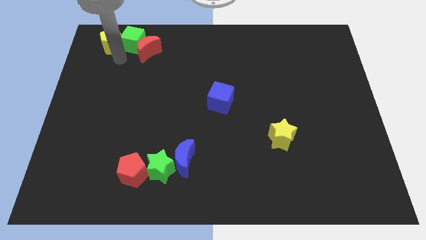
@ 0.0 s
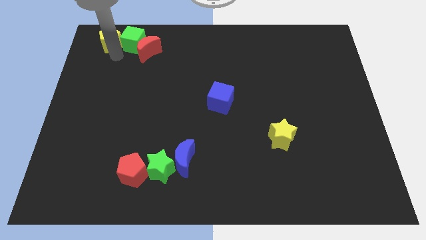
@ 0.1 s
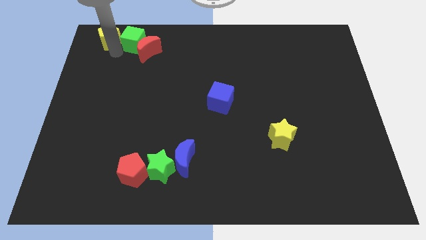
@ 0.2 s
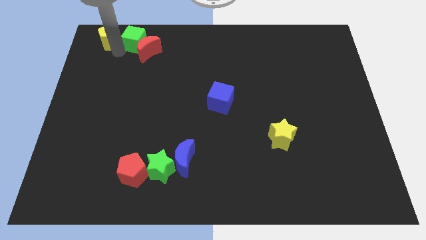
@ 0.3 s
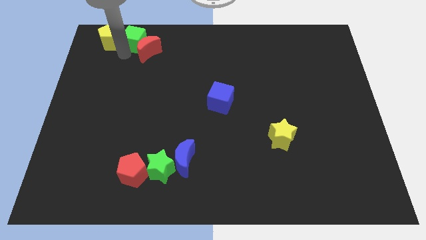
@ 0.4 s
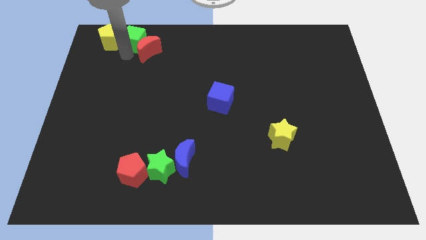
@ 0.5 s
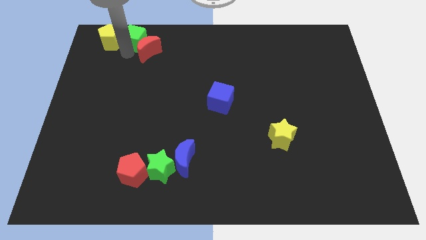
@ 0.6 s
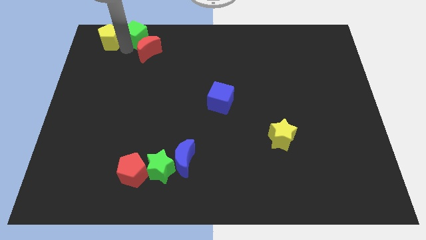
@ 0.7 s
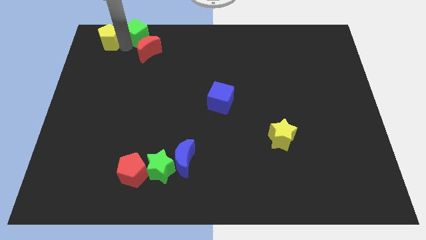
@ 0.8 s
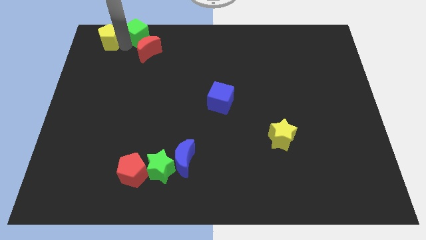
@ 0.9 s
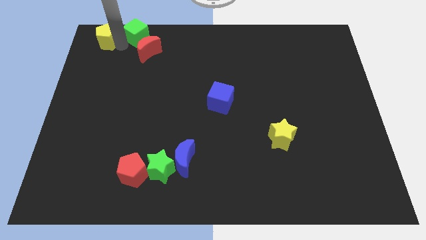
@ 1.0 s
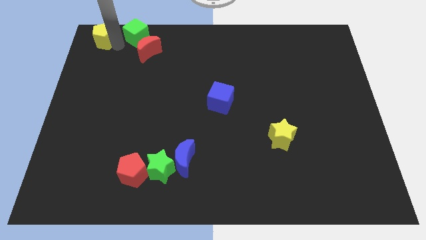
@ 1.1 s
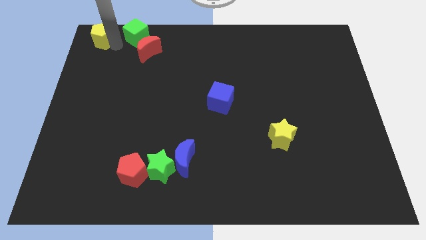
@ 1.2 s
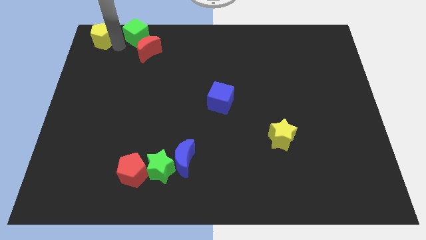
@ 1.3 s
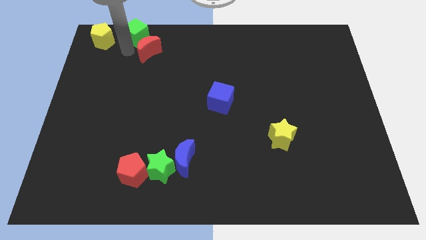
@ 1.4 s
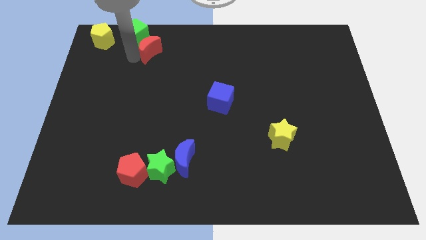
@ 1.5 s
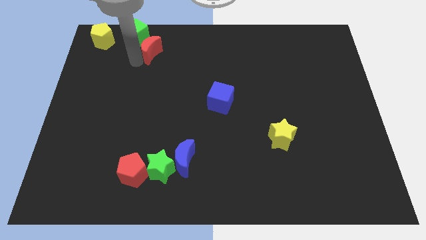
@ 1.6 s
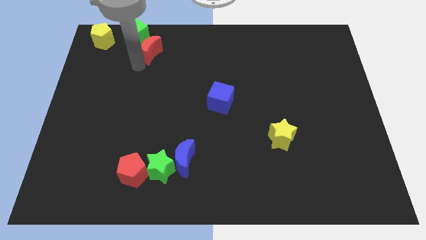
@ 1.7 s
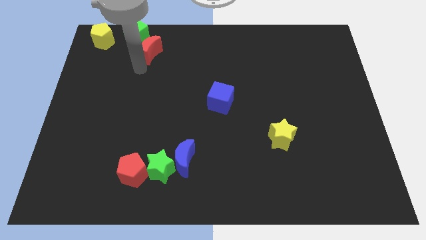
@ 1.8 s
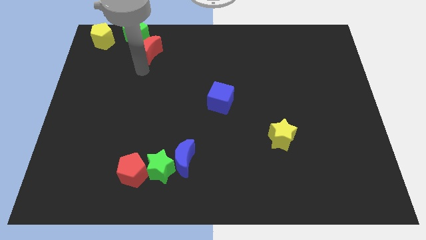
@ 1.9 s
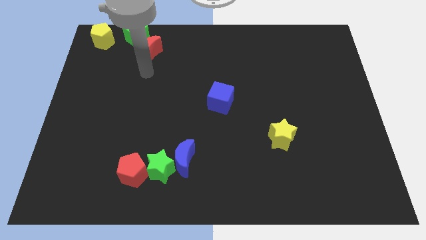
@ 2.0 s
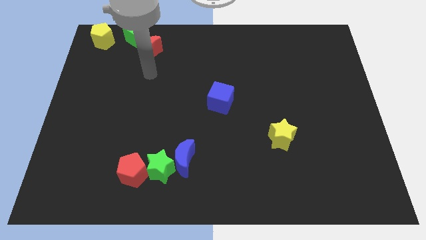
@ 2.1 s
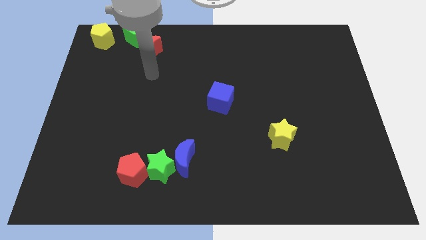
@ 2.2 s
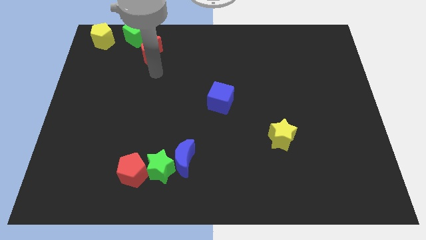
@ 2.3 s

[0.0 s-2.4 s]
move away yellow pentagon from the green cube

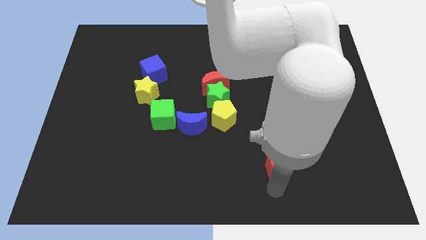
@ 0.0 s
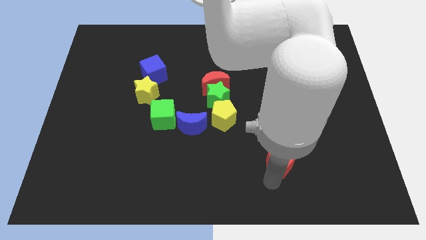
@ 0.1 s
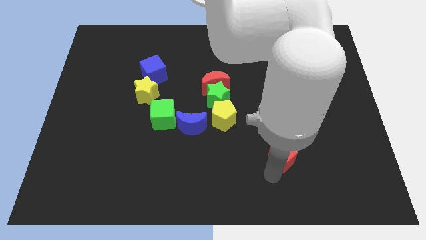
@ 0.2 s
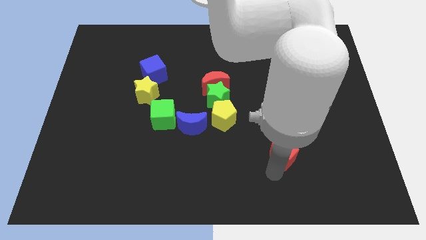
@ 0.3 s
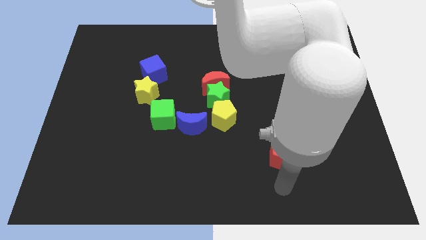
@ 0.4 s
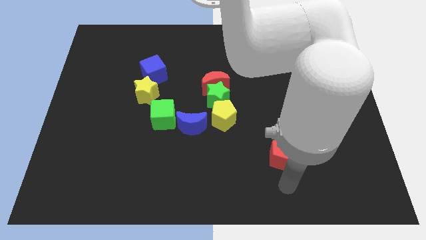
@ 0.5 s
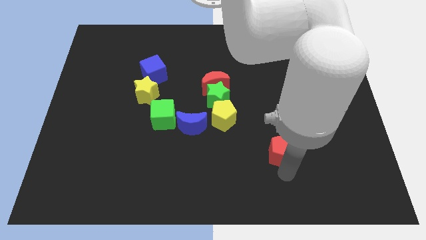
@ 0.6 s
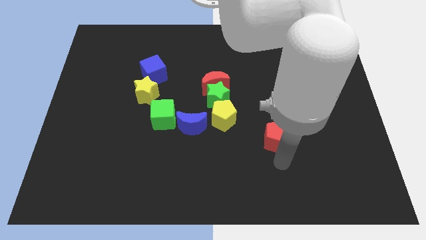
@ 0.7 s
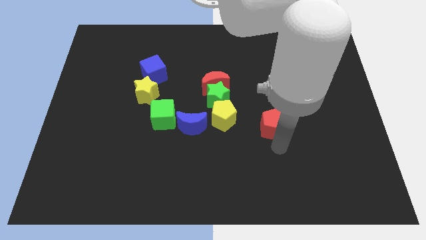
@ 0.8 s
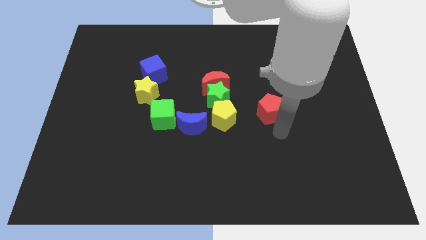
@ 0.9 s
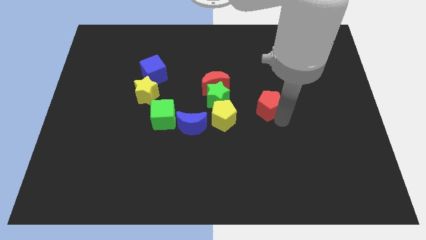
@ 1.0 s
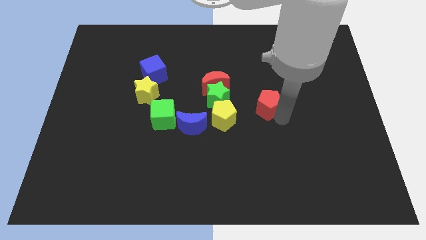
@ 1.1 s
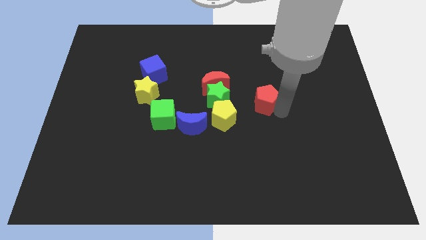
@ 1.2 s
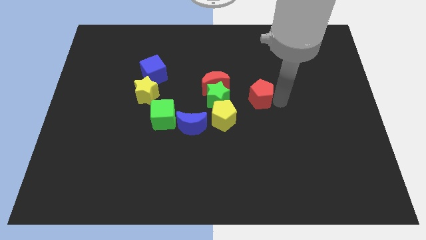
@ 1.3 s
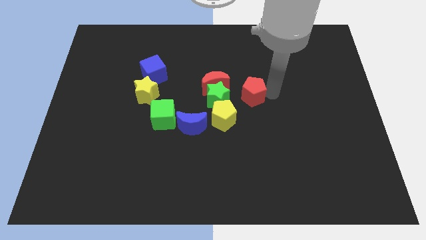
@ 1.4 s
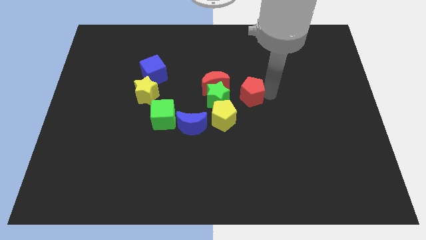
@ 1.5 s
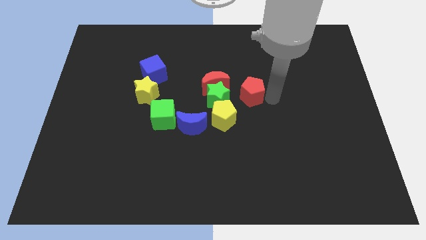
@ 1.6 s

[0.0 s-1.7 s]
push the red pentagon to the right of the green star

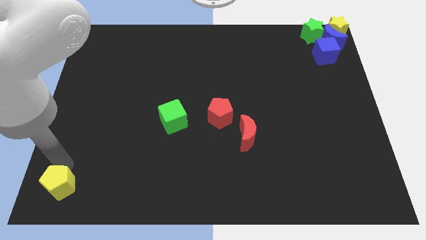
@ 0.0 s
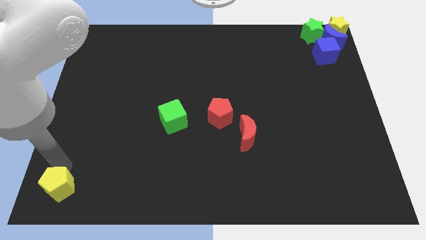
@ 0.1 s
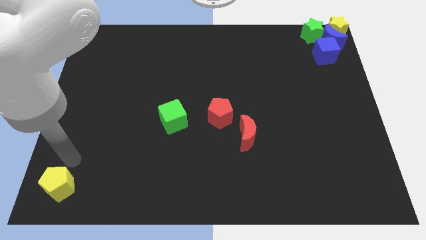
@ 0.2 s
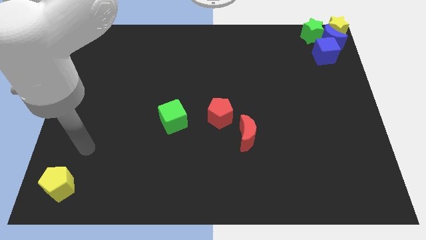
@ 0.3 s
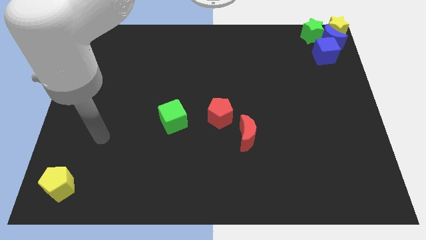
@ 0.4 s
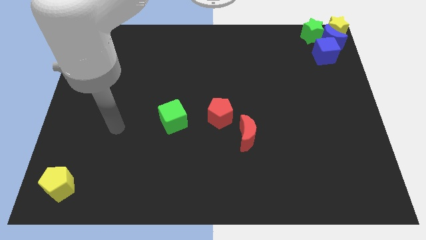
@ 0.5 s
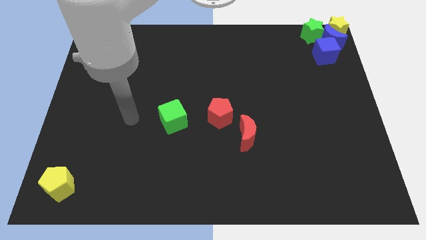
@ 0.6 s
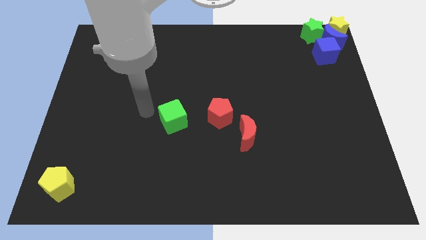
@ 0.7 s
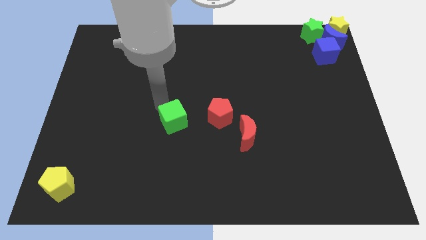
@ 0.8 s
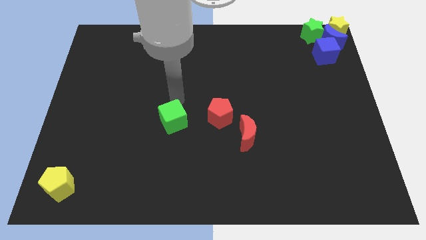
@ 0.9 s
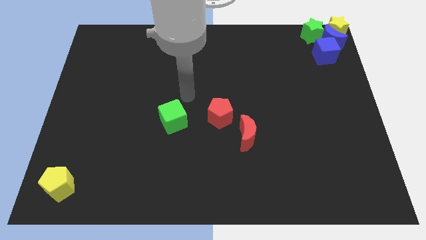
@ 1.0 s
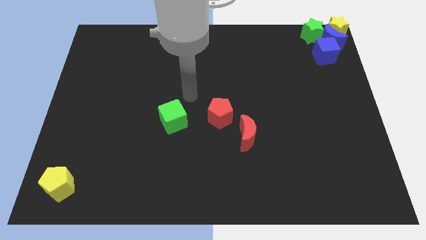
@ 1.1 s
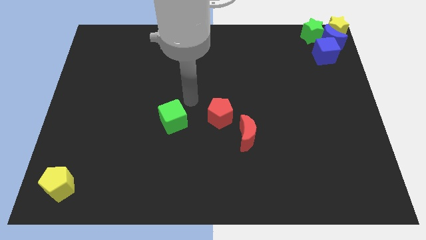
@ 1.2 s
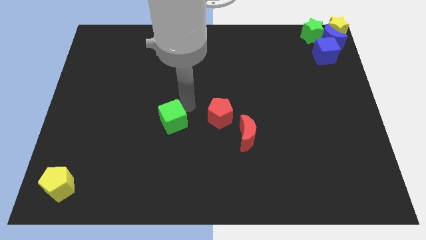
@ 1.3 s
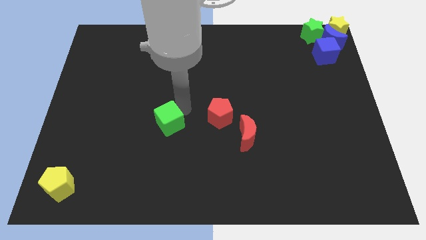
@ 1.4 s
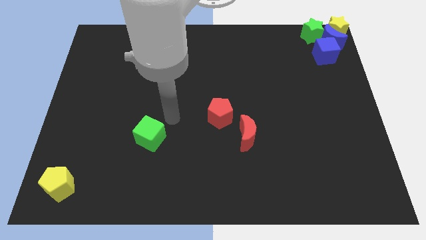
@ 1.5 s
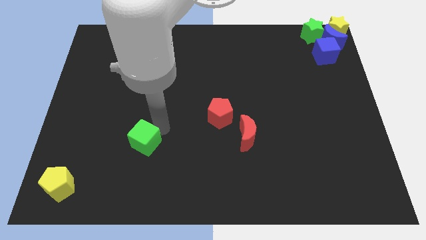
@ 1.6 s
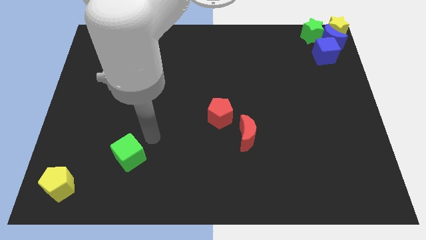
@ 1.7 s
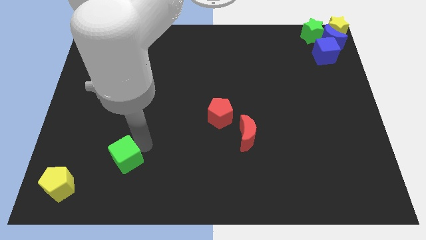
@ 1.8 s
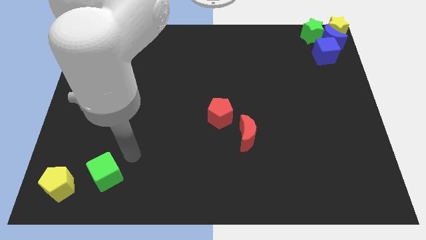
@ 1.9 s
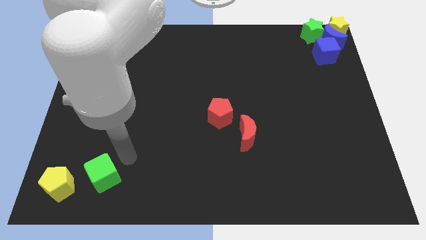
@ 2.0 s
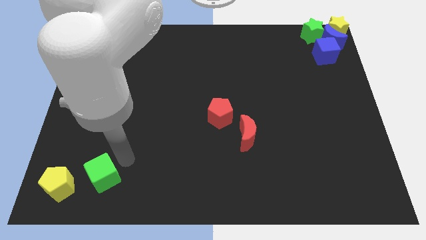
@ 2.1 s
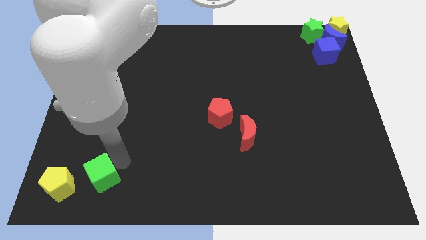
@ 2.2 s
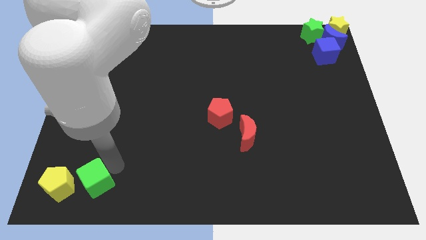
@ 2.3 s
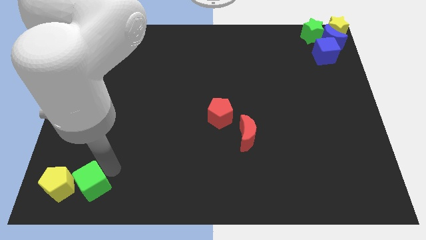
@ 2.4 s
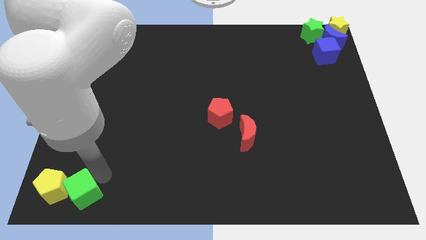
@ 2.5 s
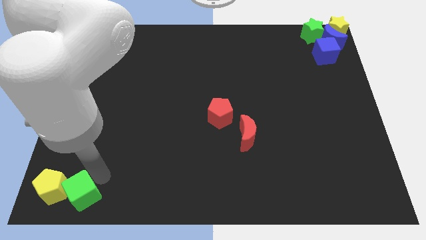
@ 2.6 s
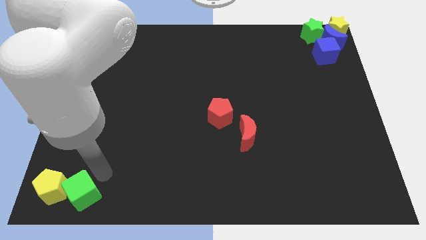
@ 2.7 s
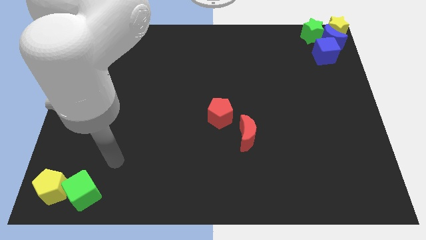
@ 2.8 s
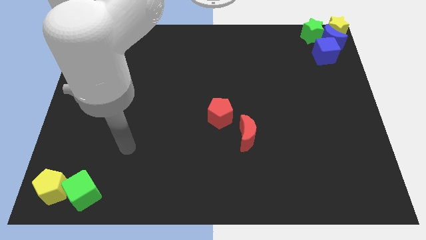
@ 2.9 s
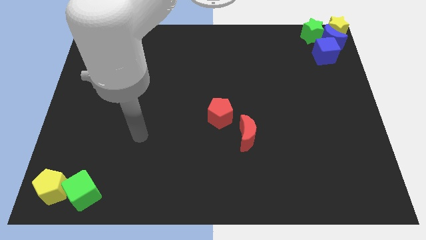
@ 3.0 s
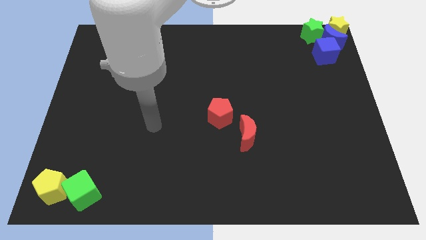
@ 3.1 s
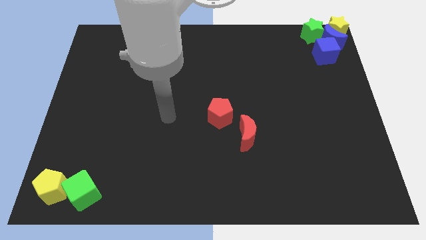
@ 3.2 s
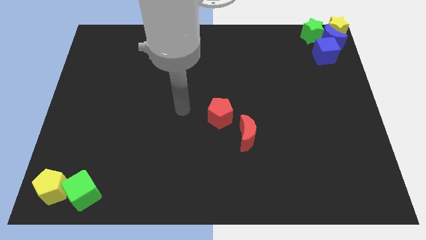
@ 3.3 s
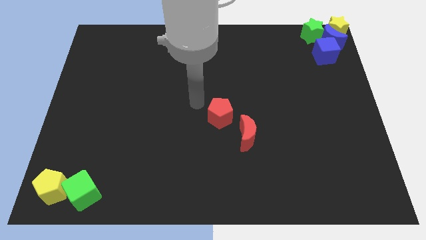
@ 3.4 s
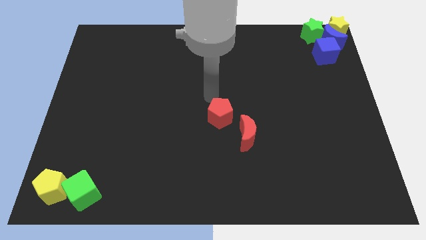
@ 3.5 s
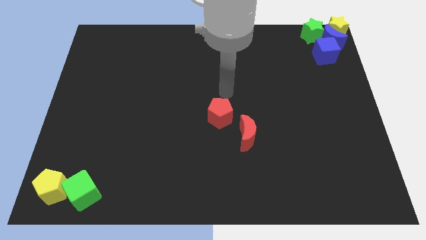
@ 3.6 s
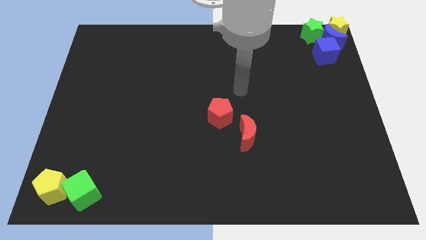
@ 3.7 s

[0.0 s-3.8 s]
push the green cube to the left bottom of the board

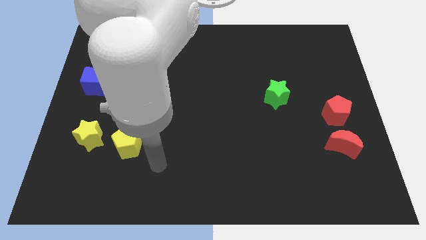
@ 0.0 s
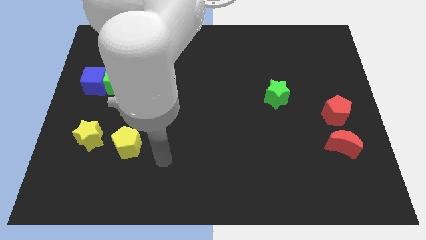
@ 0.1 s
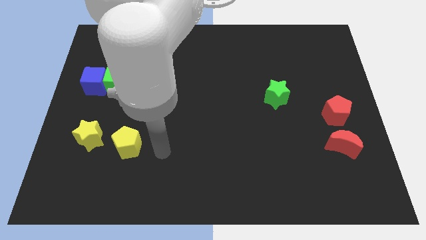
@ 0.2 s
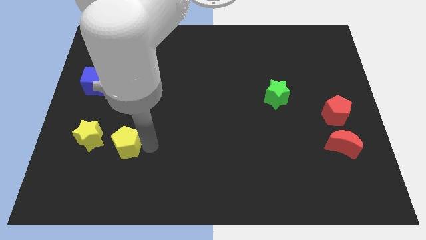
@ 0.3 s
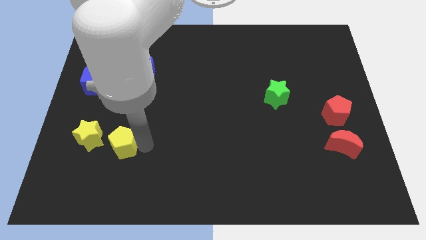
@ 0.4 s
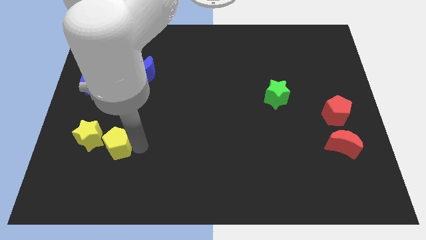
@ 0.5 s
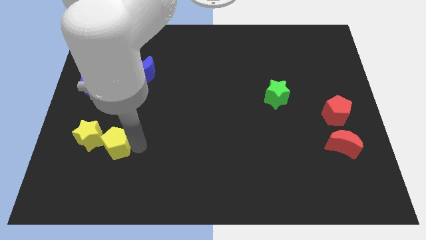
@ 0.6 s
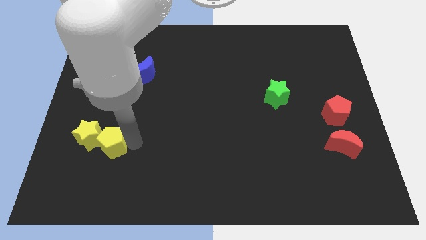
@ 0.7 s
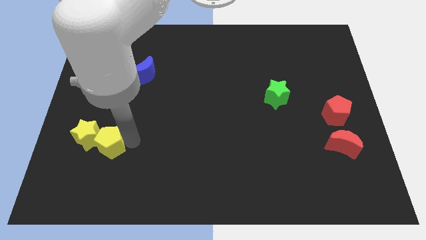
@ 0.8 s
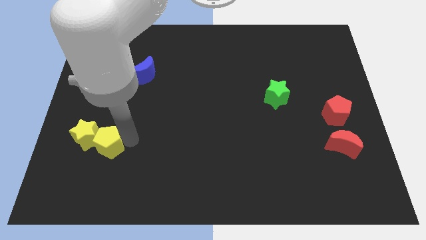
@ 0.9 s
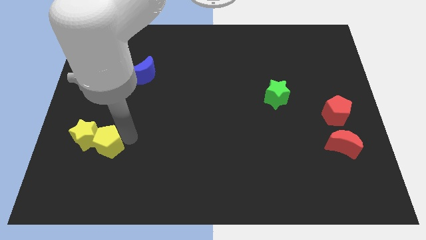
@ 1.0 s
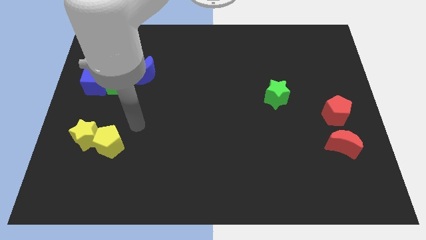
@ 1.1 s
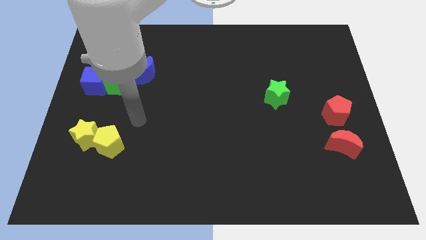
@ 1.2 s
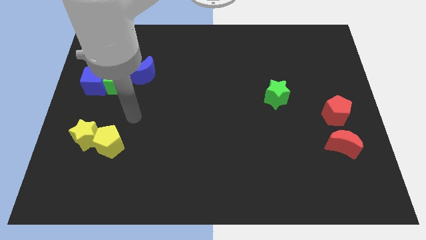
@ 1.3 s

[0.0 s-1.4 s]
push the yellow pentagon into yellow star to the right
